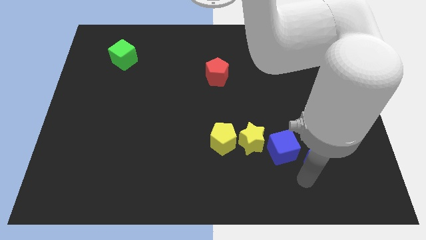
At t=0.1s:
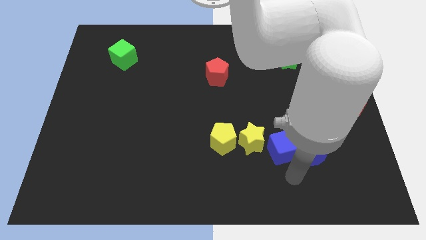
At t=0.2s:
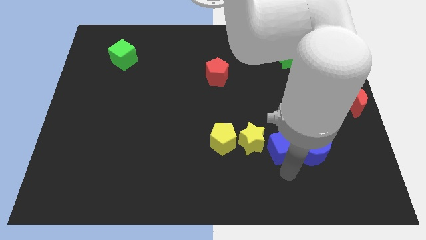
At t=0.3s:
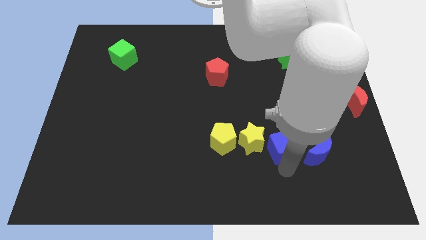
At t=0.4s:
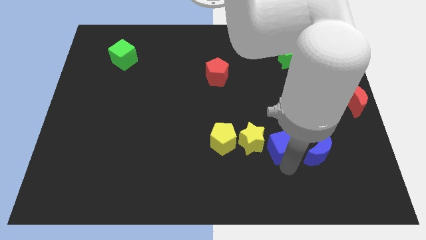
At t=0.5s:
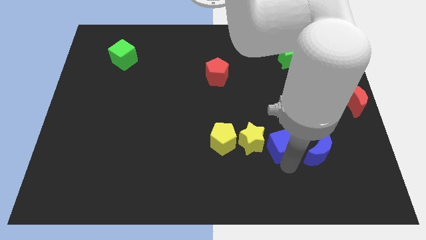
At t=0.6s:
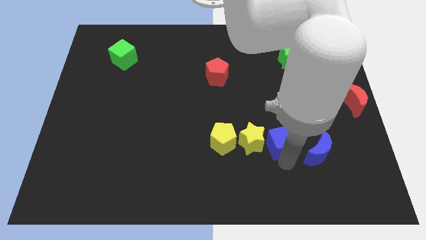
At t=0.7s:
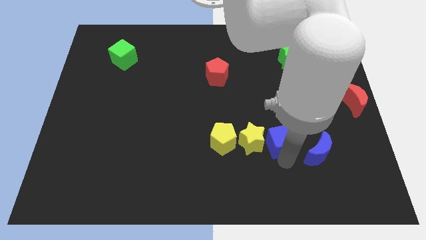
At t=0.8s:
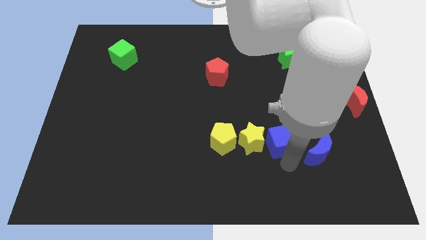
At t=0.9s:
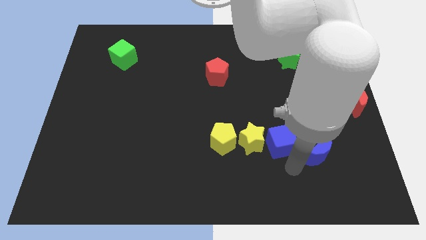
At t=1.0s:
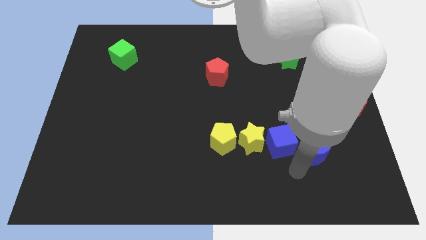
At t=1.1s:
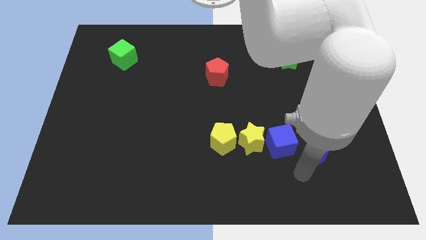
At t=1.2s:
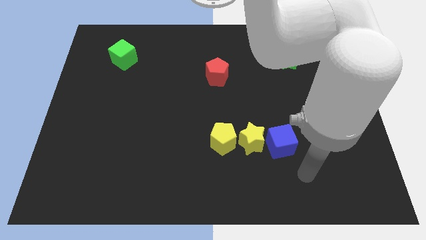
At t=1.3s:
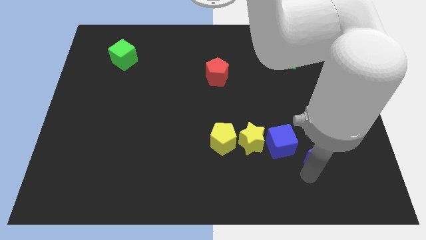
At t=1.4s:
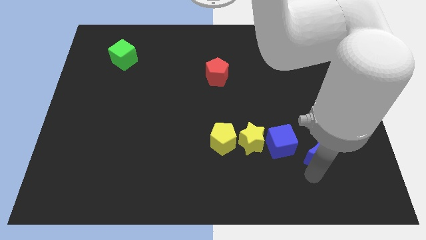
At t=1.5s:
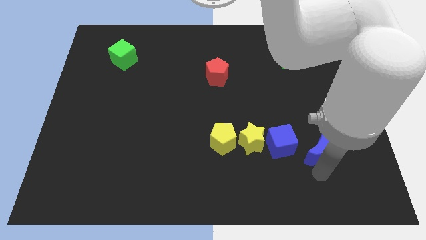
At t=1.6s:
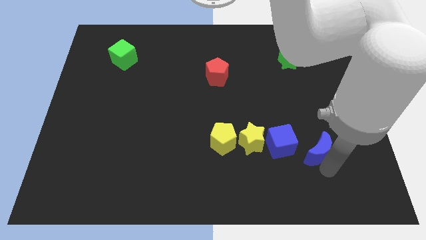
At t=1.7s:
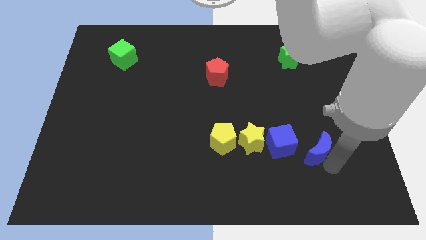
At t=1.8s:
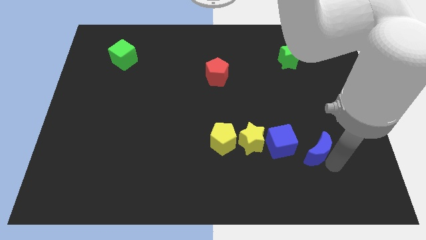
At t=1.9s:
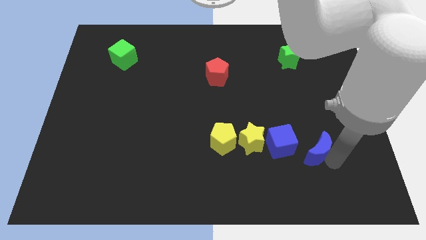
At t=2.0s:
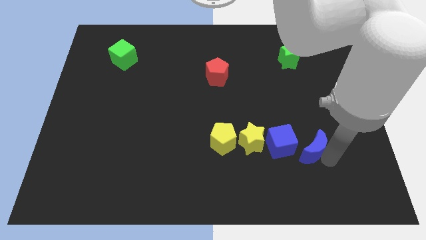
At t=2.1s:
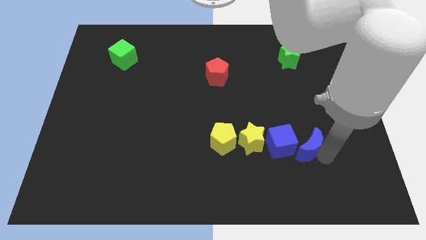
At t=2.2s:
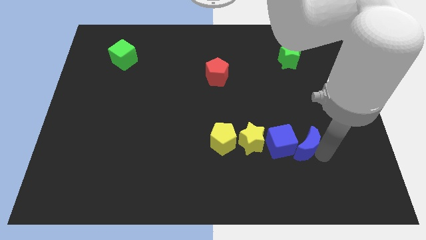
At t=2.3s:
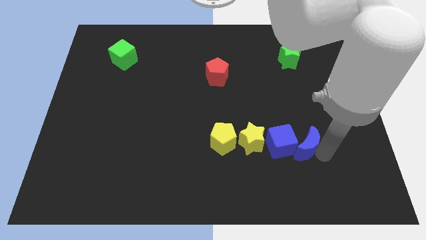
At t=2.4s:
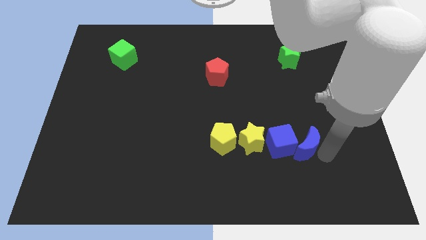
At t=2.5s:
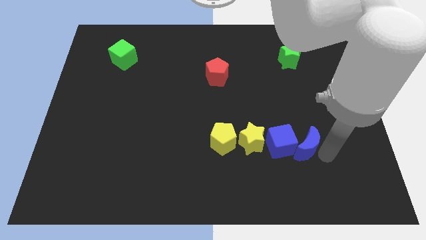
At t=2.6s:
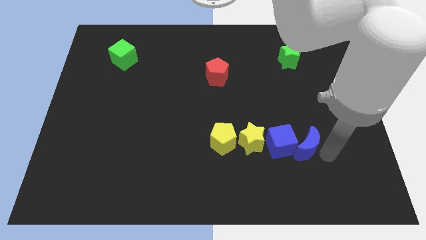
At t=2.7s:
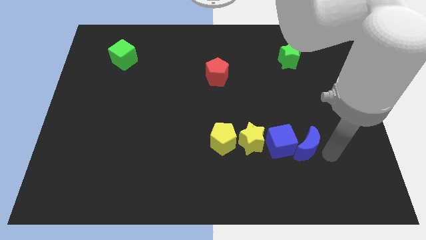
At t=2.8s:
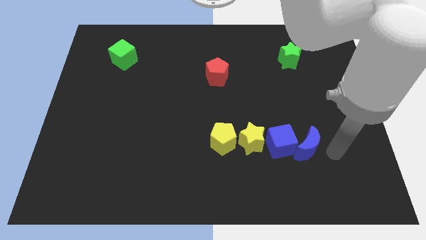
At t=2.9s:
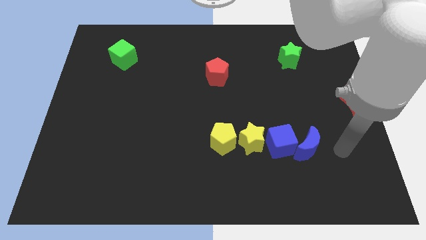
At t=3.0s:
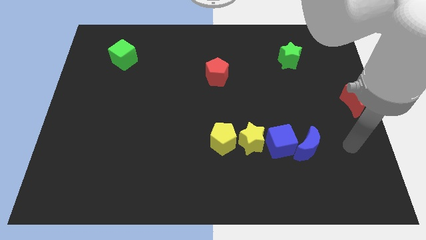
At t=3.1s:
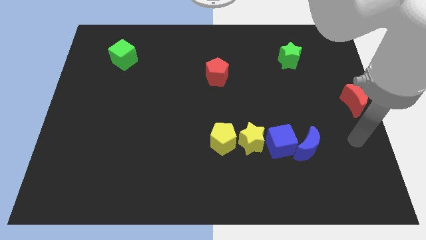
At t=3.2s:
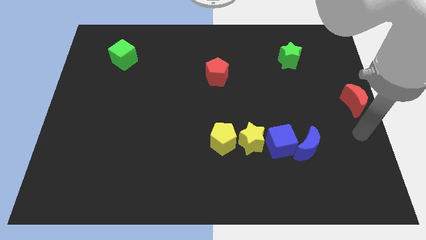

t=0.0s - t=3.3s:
adjust the blue blocks at the right side of the yellow star

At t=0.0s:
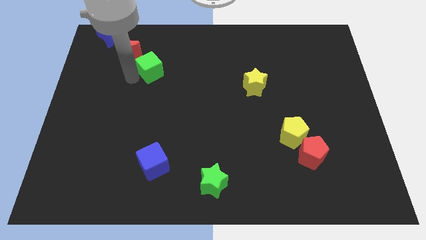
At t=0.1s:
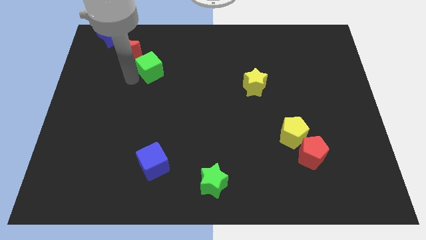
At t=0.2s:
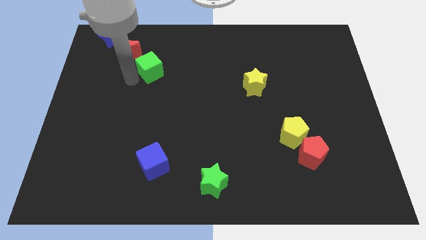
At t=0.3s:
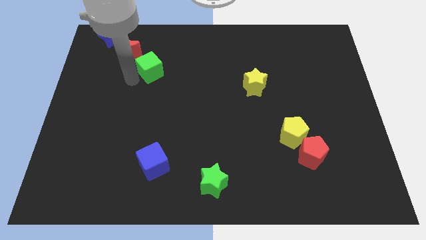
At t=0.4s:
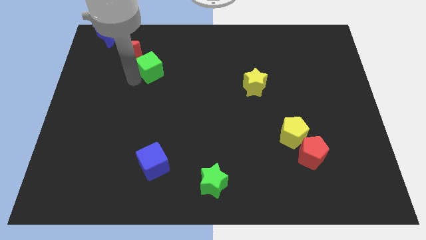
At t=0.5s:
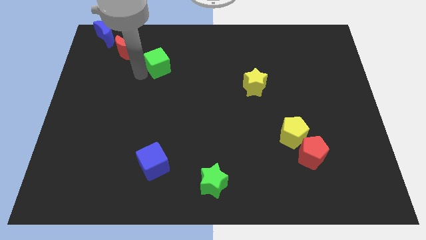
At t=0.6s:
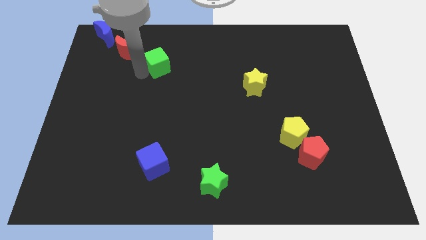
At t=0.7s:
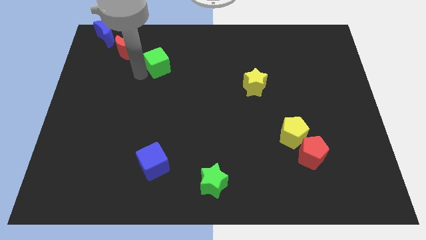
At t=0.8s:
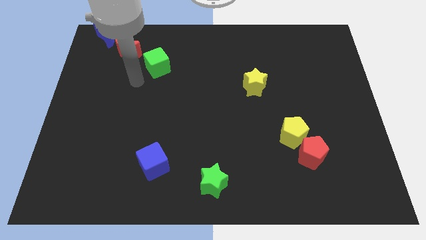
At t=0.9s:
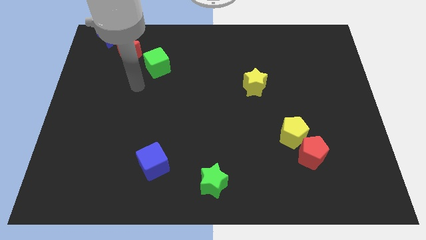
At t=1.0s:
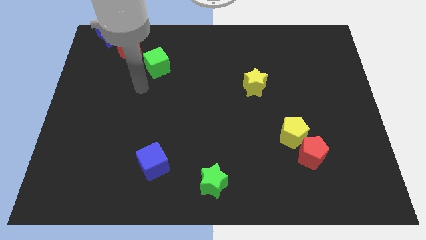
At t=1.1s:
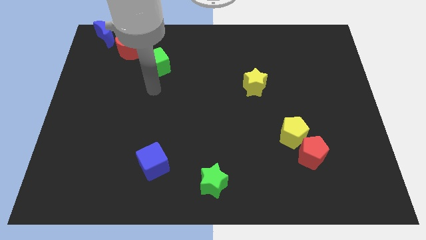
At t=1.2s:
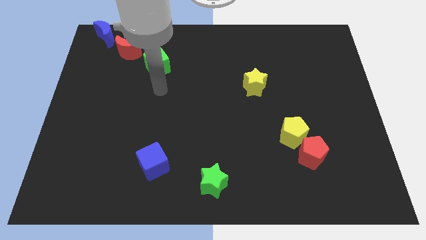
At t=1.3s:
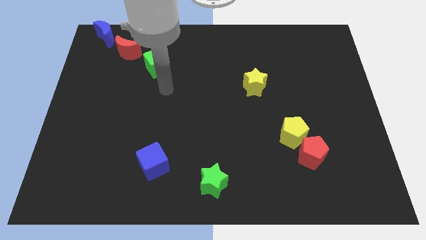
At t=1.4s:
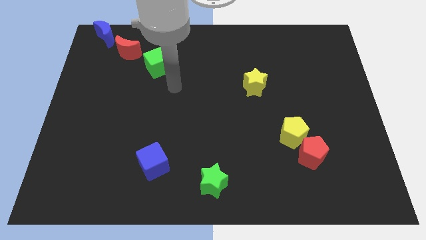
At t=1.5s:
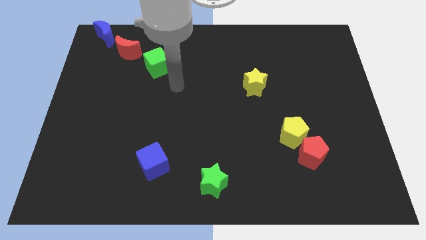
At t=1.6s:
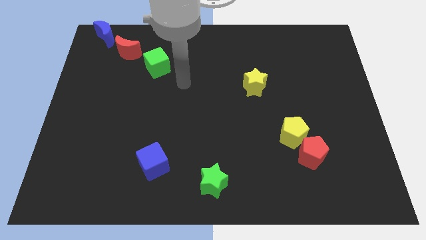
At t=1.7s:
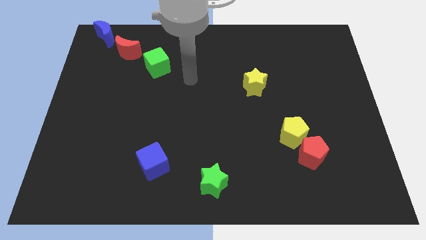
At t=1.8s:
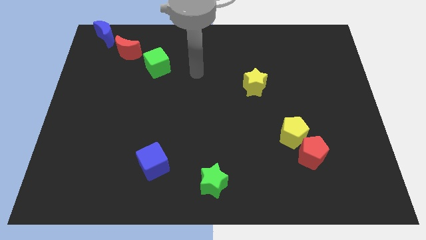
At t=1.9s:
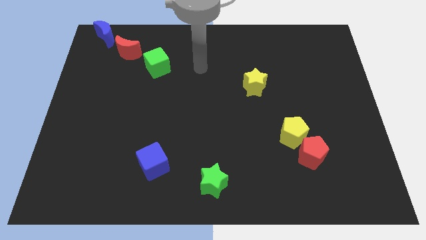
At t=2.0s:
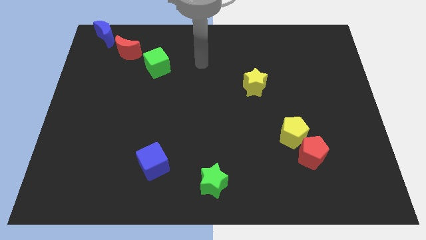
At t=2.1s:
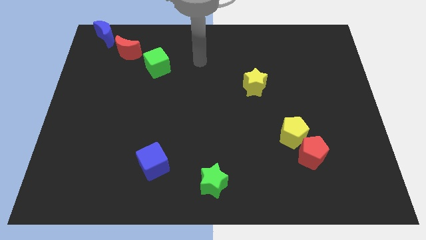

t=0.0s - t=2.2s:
slide the green cube slightly to the top

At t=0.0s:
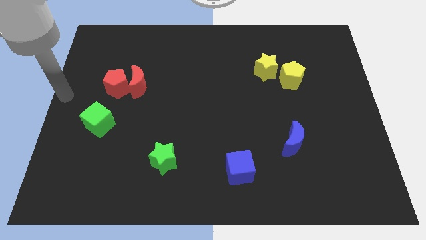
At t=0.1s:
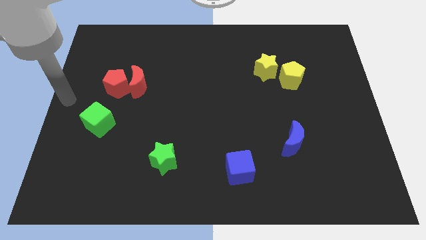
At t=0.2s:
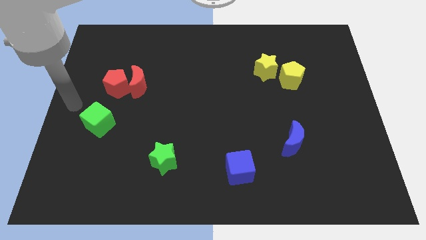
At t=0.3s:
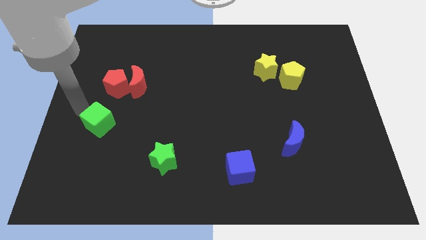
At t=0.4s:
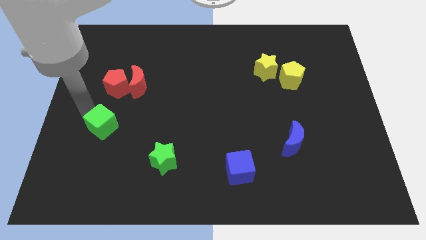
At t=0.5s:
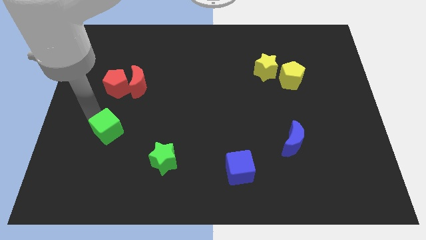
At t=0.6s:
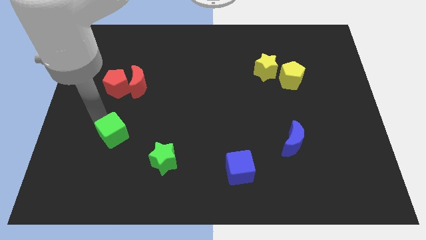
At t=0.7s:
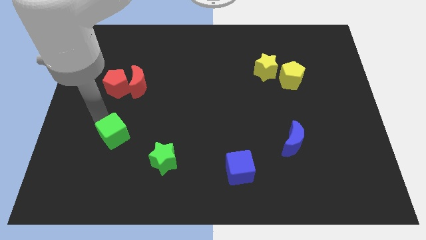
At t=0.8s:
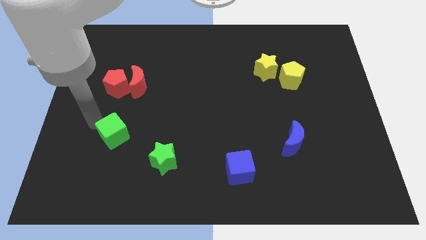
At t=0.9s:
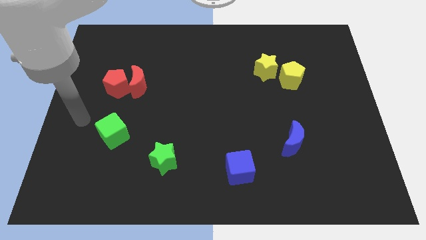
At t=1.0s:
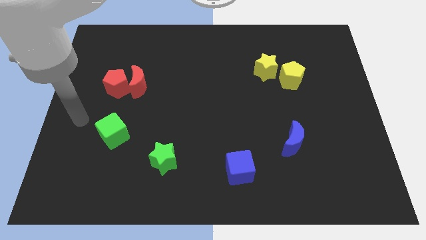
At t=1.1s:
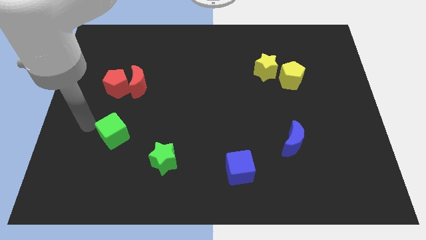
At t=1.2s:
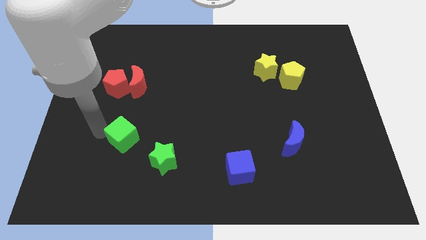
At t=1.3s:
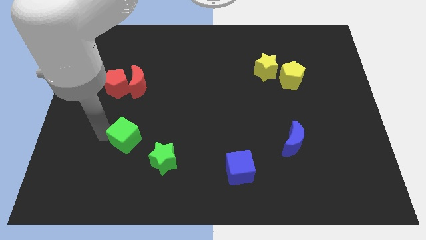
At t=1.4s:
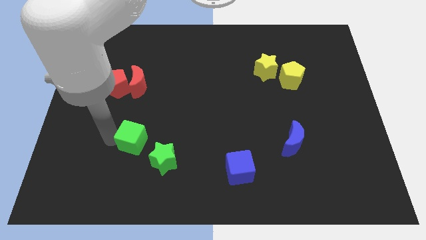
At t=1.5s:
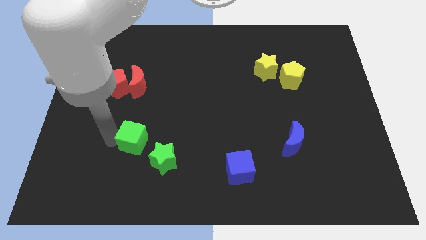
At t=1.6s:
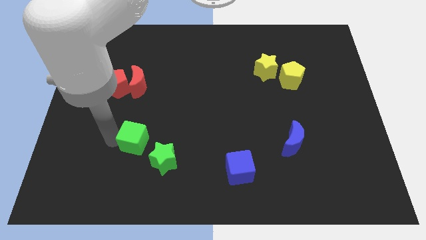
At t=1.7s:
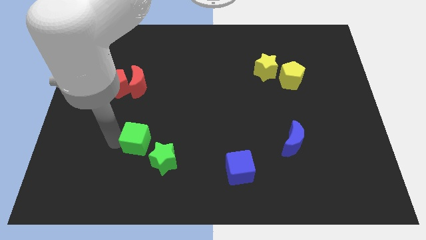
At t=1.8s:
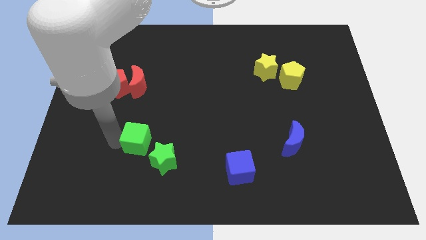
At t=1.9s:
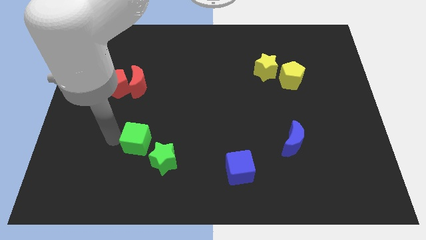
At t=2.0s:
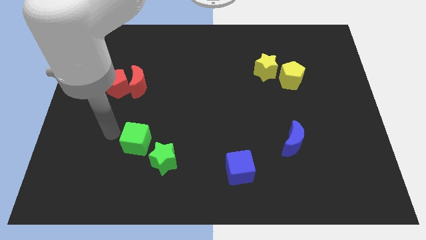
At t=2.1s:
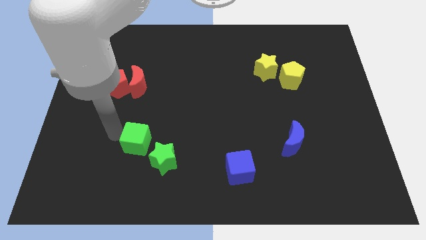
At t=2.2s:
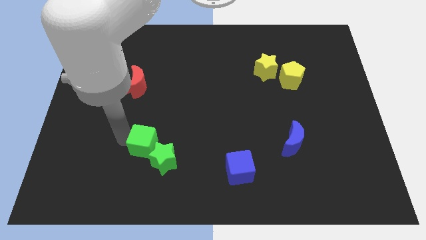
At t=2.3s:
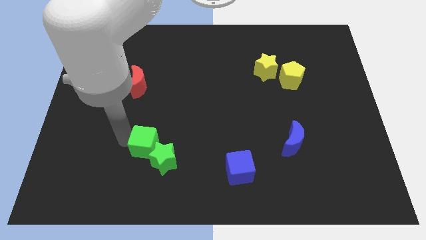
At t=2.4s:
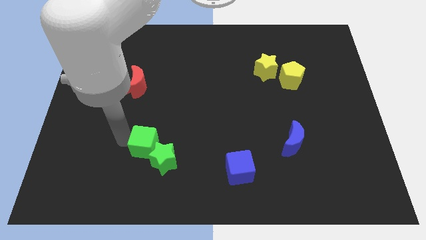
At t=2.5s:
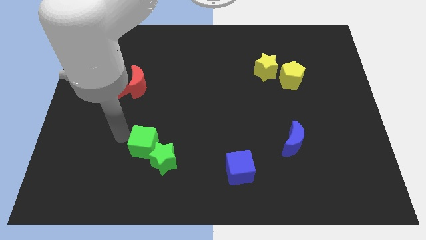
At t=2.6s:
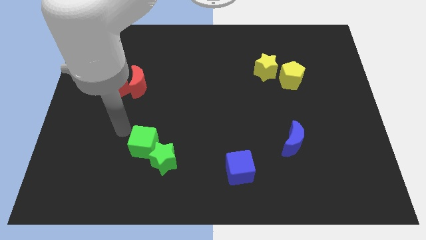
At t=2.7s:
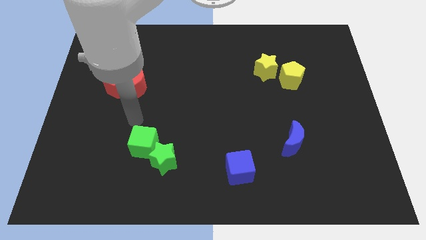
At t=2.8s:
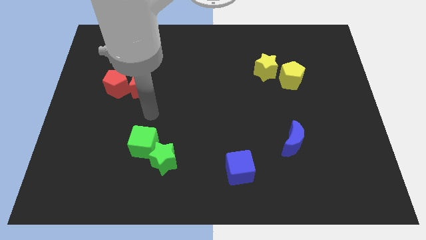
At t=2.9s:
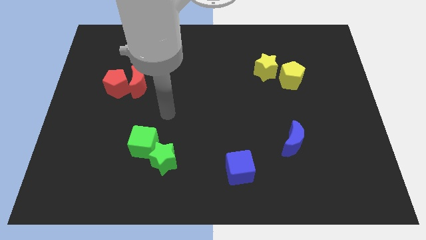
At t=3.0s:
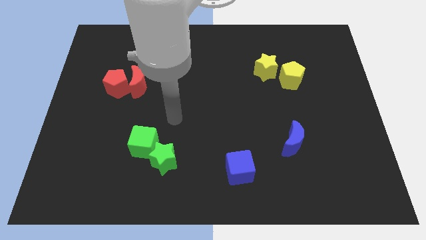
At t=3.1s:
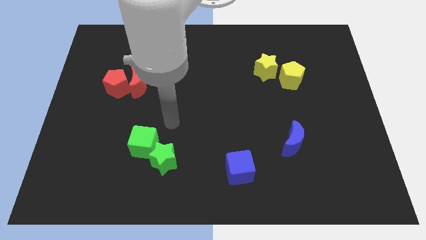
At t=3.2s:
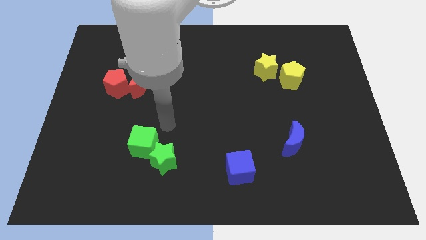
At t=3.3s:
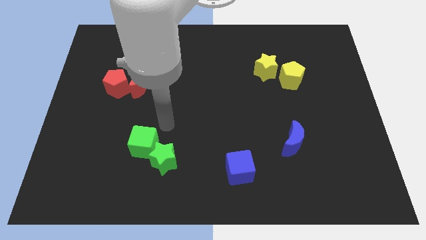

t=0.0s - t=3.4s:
move the green cube close to the green star

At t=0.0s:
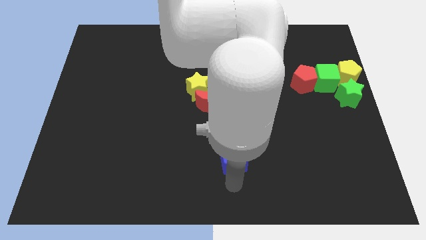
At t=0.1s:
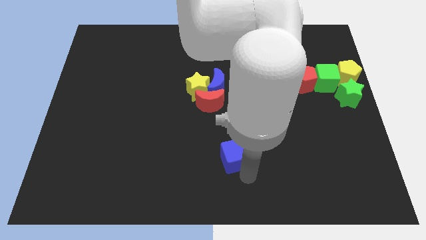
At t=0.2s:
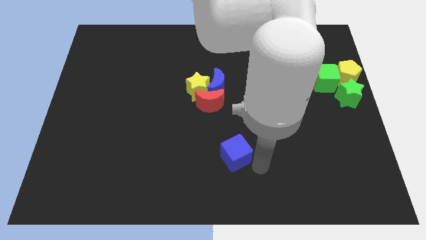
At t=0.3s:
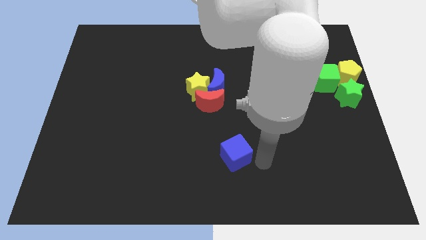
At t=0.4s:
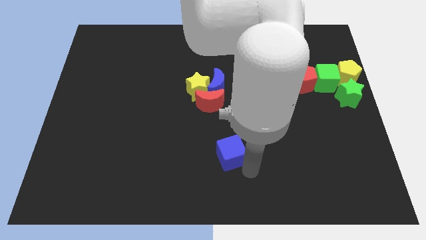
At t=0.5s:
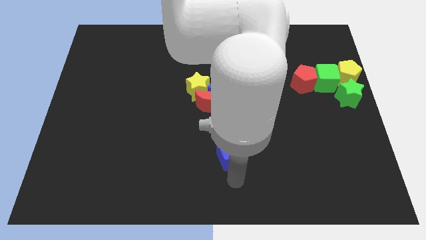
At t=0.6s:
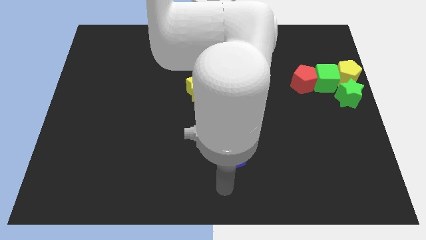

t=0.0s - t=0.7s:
drag the blue cube slightly upwards
